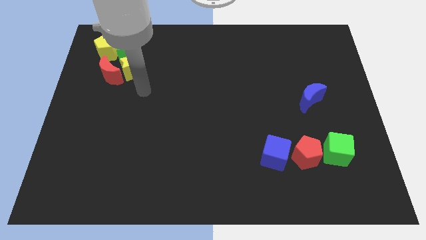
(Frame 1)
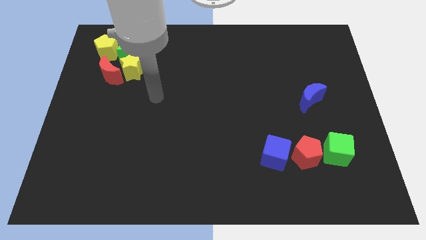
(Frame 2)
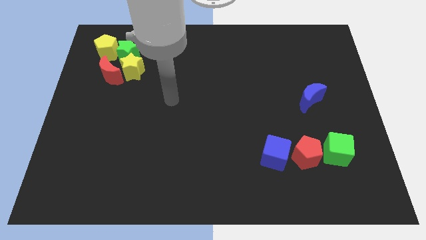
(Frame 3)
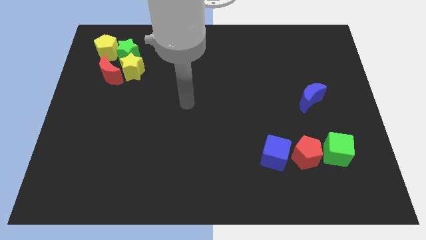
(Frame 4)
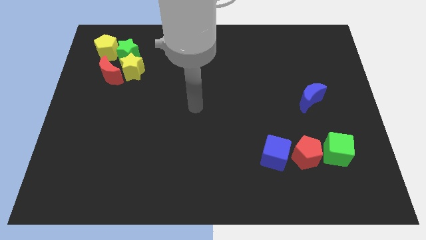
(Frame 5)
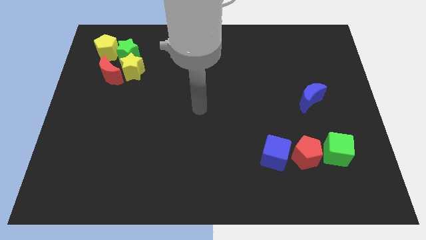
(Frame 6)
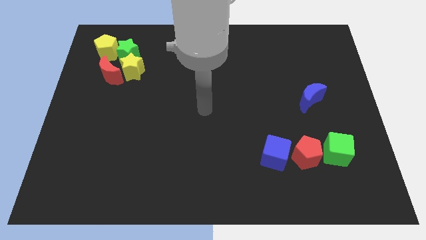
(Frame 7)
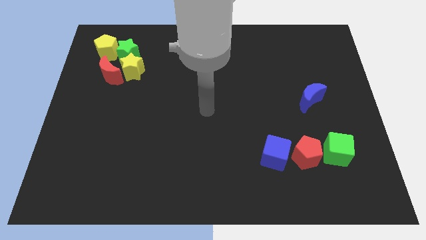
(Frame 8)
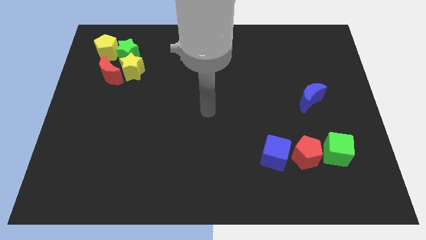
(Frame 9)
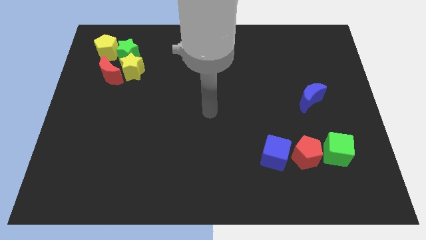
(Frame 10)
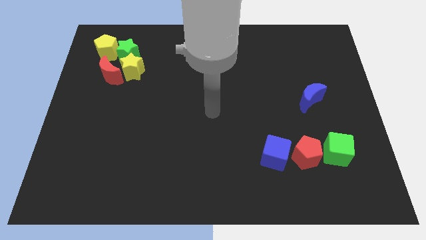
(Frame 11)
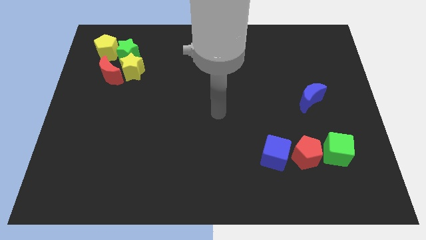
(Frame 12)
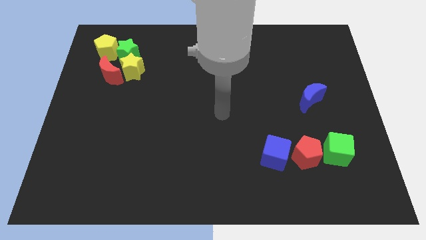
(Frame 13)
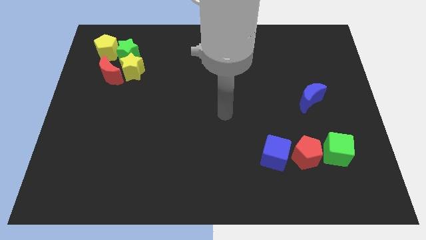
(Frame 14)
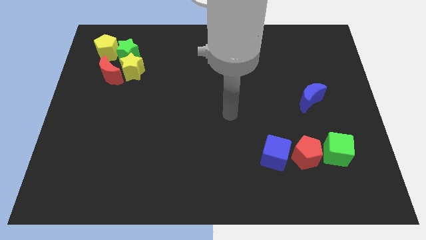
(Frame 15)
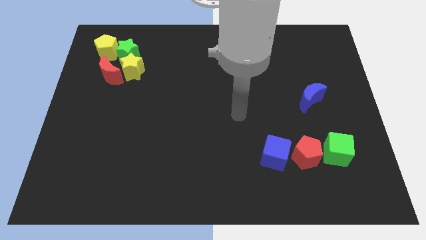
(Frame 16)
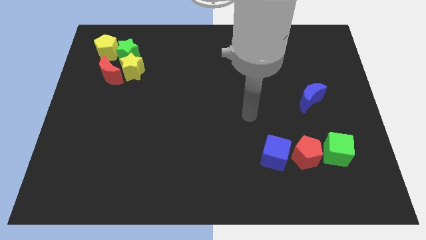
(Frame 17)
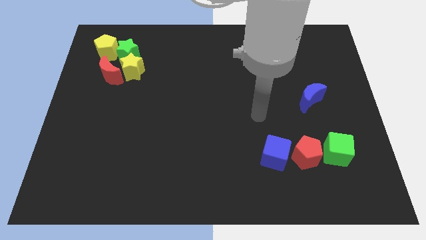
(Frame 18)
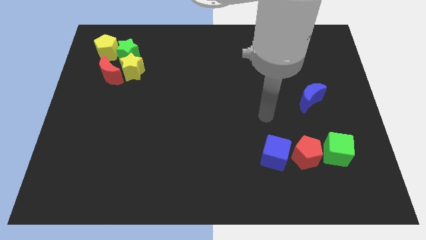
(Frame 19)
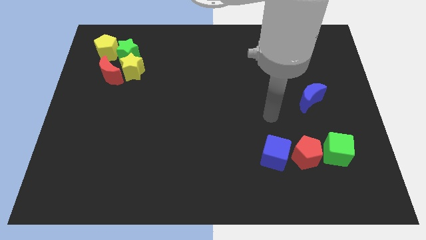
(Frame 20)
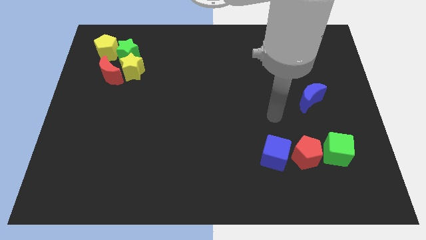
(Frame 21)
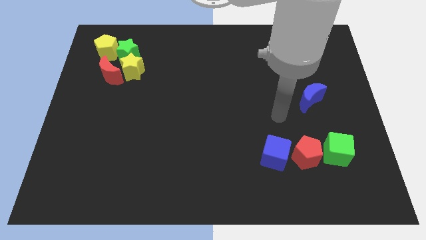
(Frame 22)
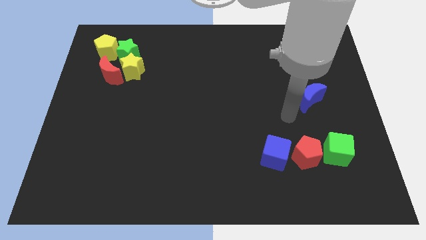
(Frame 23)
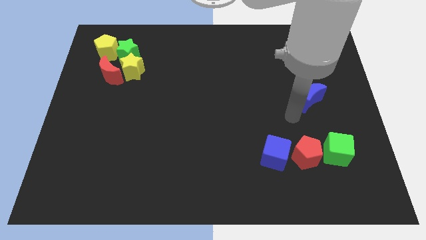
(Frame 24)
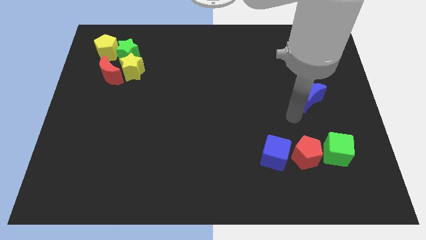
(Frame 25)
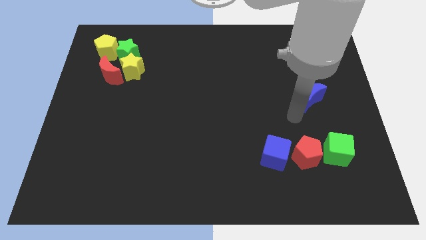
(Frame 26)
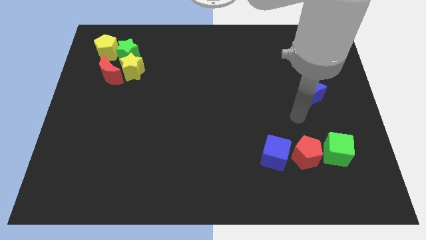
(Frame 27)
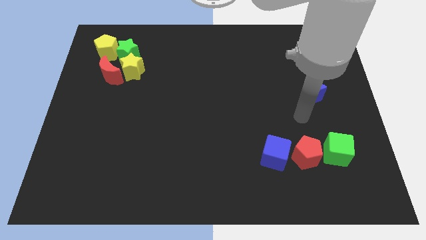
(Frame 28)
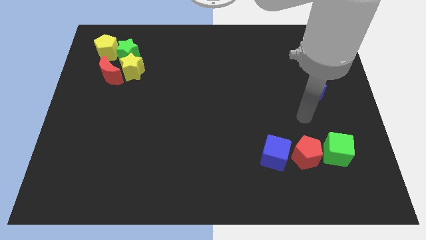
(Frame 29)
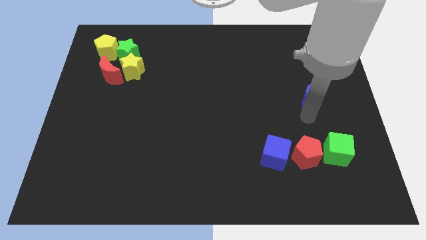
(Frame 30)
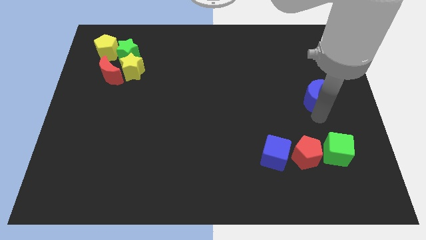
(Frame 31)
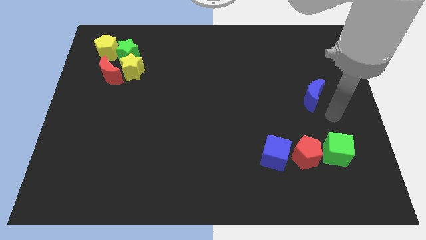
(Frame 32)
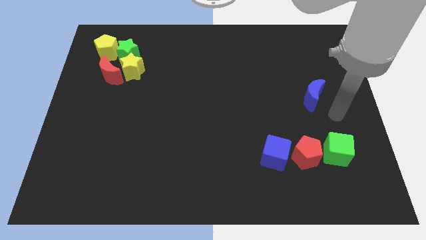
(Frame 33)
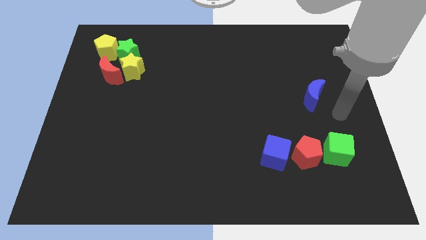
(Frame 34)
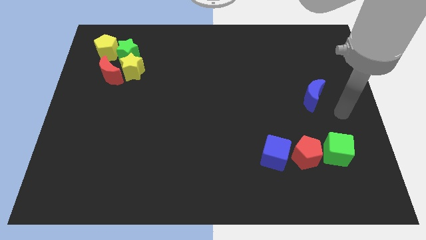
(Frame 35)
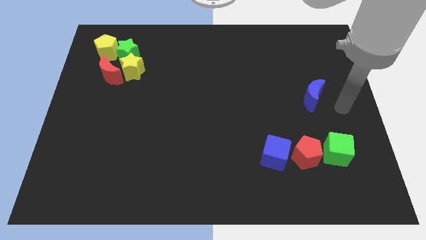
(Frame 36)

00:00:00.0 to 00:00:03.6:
go away from the blocks

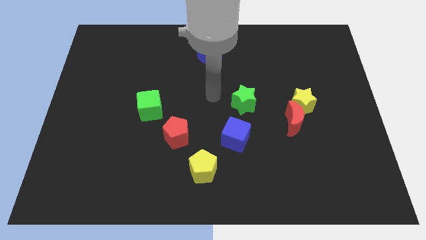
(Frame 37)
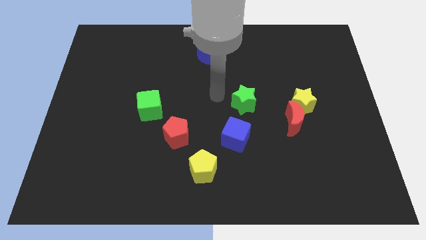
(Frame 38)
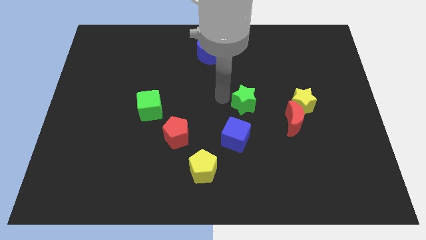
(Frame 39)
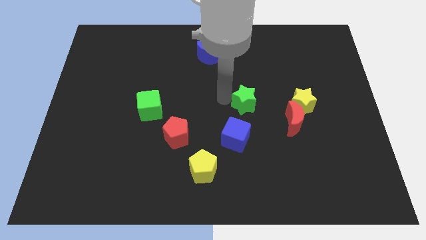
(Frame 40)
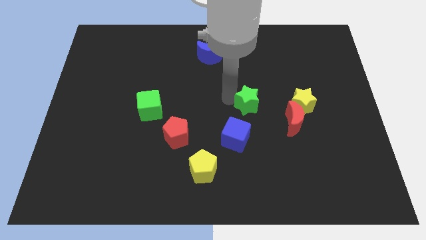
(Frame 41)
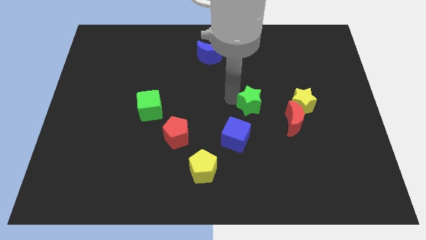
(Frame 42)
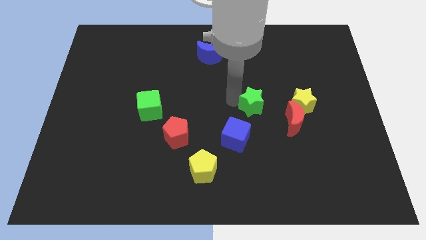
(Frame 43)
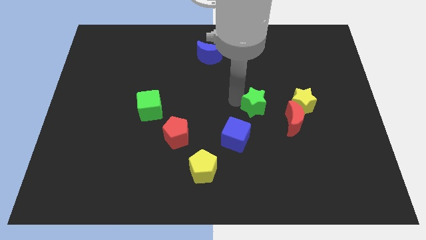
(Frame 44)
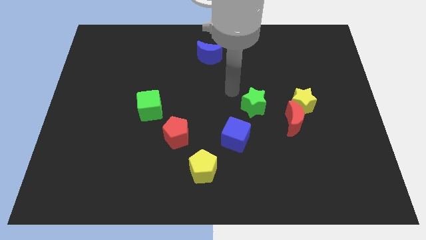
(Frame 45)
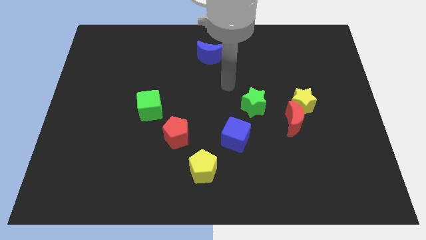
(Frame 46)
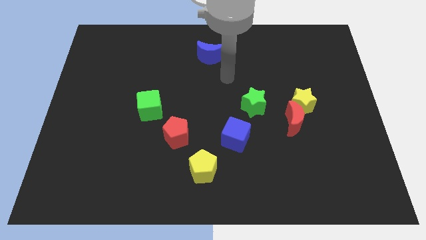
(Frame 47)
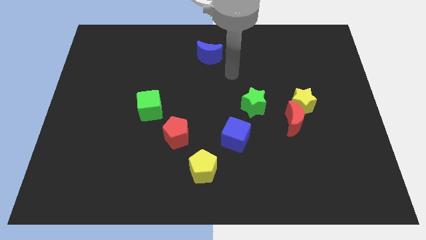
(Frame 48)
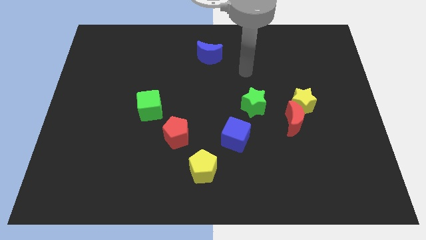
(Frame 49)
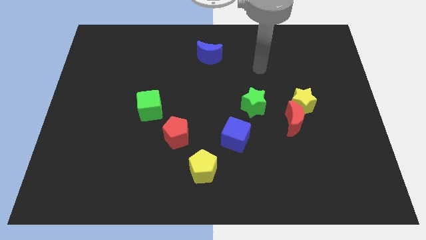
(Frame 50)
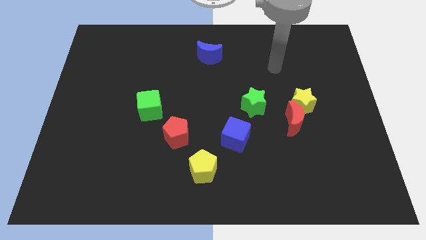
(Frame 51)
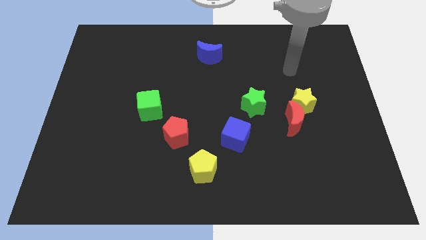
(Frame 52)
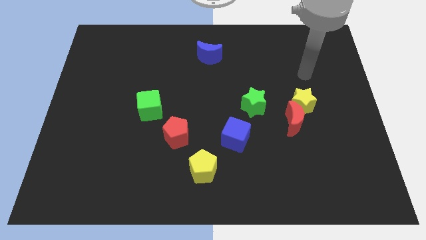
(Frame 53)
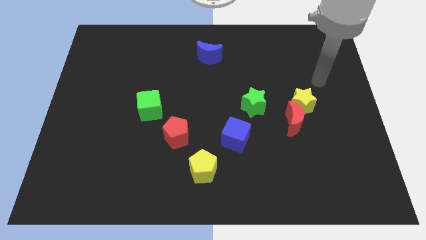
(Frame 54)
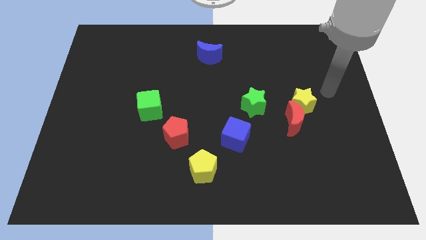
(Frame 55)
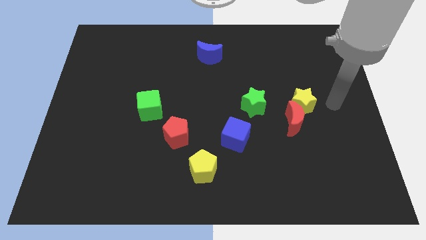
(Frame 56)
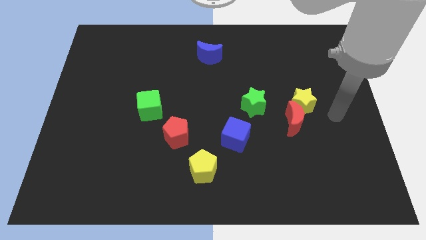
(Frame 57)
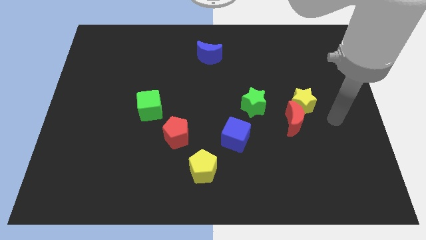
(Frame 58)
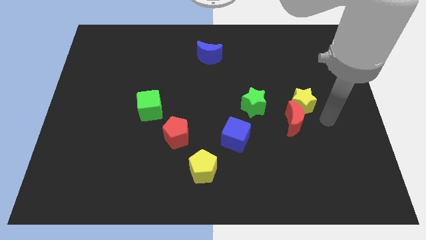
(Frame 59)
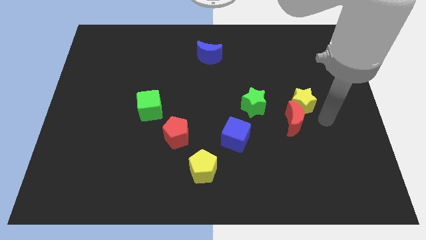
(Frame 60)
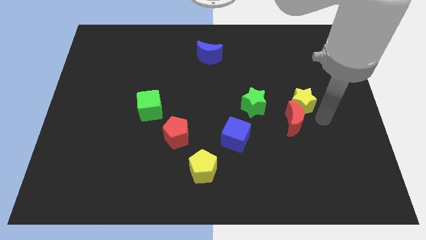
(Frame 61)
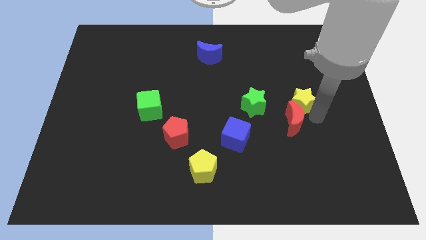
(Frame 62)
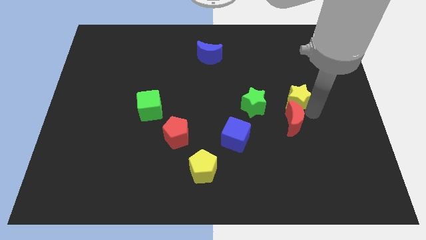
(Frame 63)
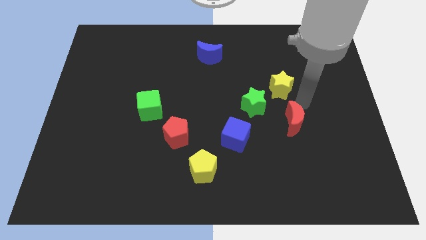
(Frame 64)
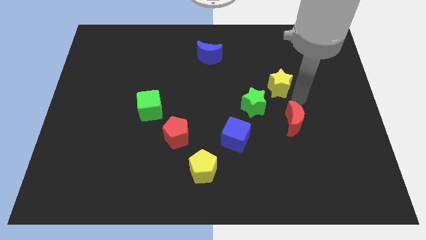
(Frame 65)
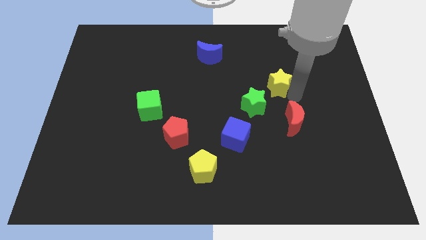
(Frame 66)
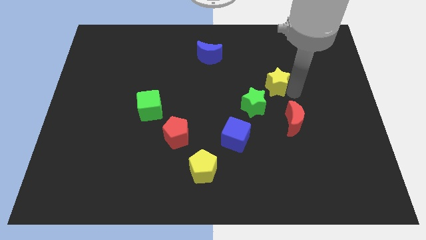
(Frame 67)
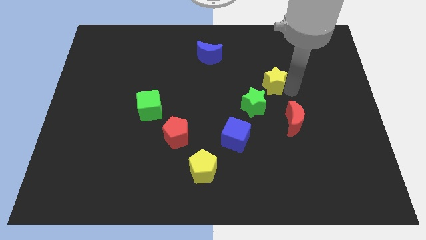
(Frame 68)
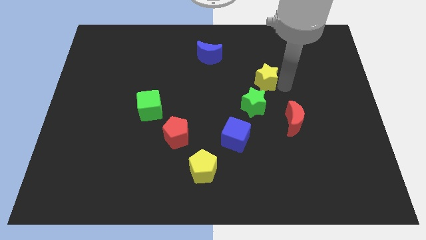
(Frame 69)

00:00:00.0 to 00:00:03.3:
move the green star slightly towards right side

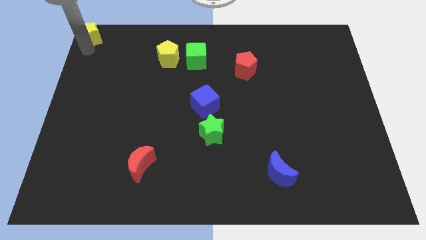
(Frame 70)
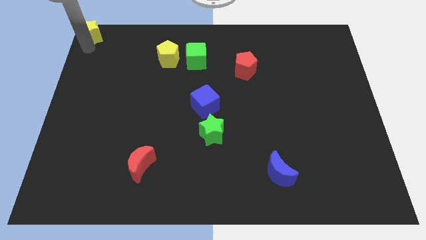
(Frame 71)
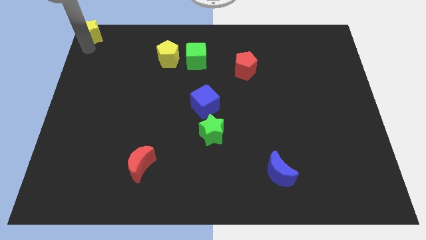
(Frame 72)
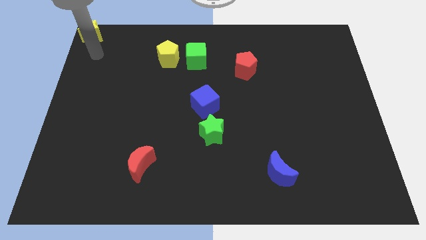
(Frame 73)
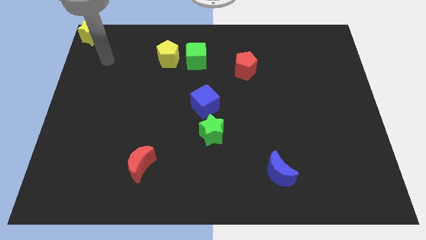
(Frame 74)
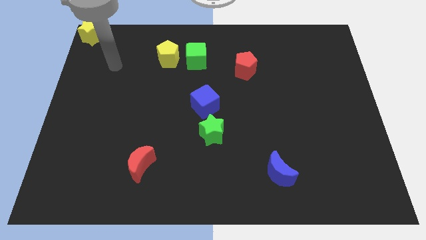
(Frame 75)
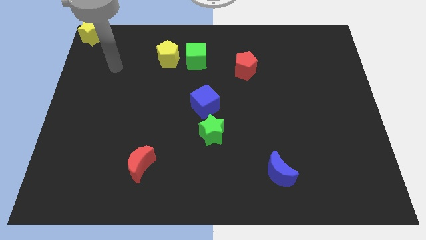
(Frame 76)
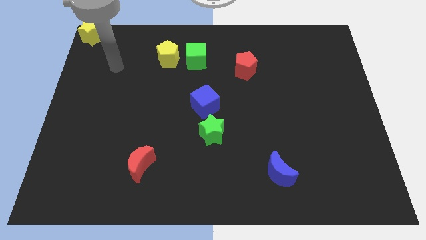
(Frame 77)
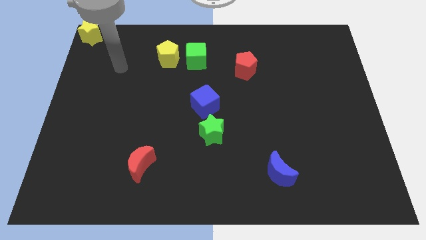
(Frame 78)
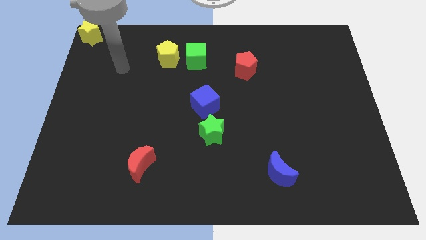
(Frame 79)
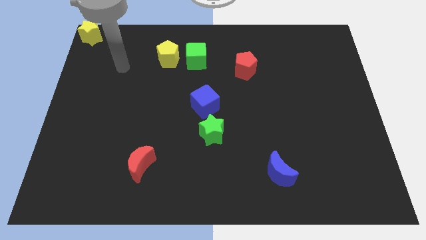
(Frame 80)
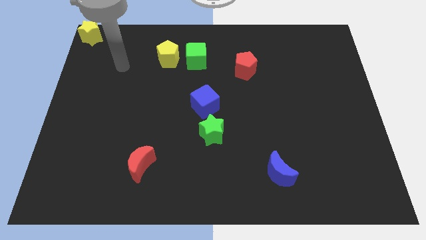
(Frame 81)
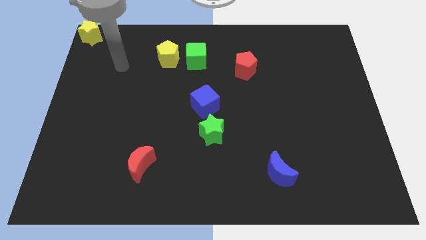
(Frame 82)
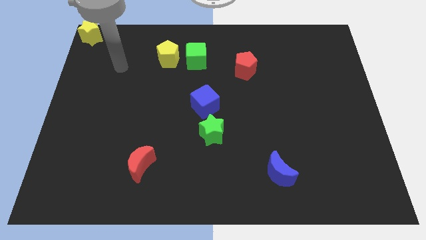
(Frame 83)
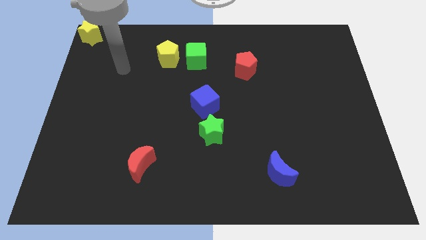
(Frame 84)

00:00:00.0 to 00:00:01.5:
move the arm away from the yellow star

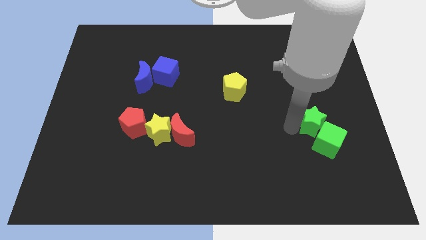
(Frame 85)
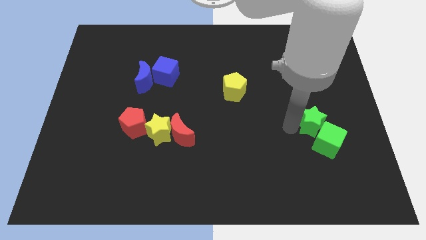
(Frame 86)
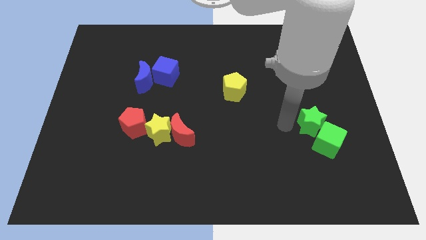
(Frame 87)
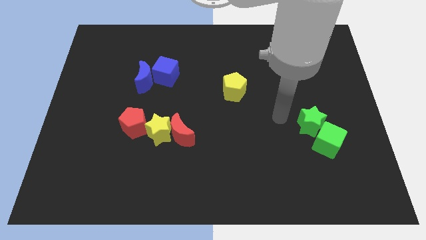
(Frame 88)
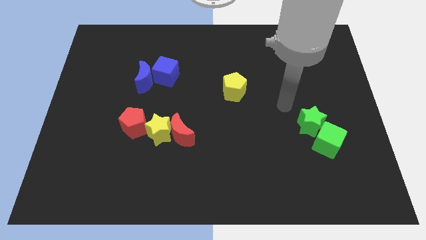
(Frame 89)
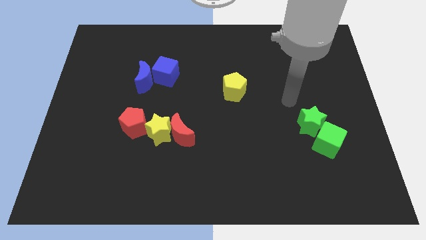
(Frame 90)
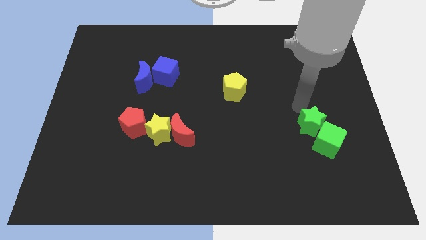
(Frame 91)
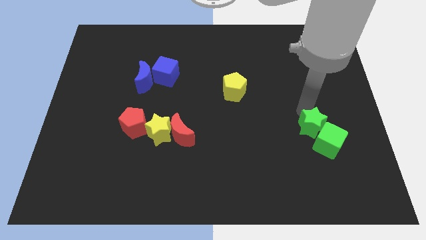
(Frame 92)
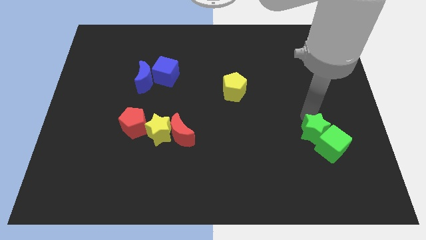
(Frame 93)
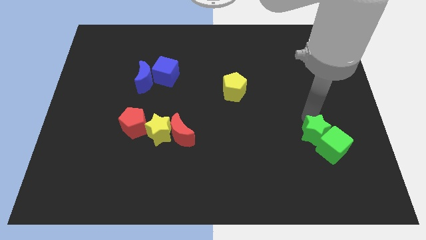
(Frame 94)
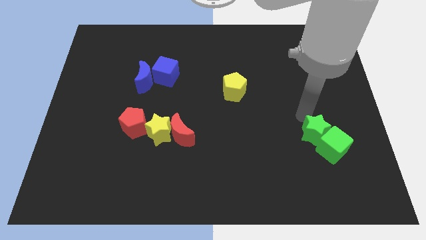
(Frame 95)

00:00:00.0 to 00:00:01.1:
move the green star slightly into the top left of the green cube
